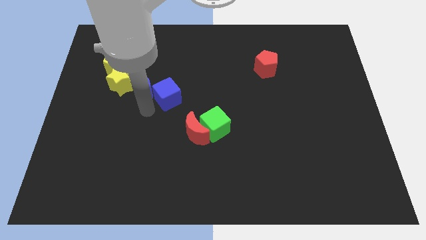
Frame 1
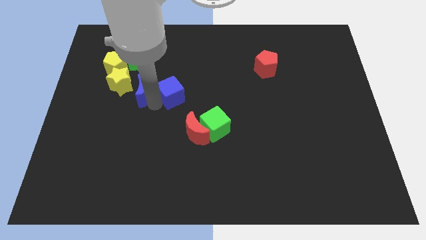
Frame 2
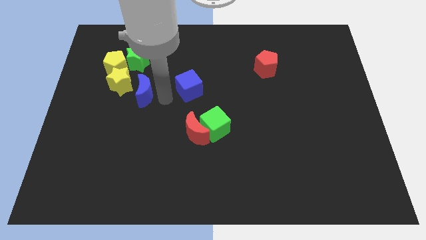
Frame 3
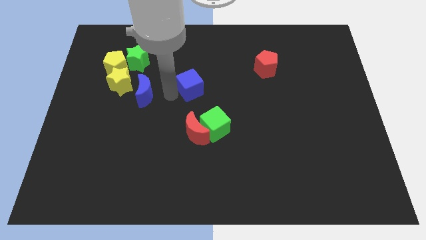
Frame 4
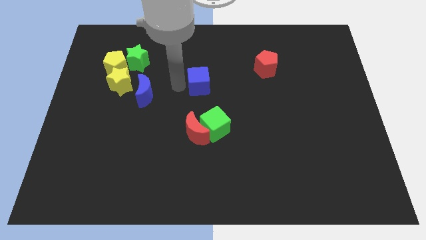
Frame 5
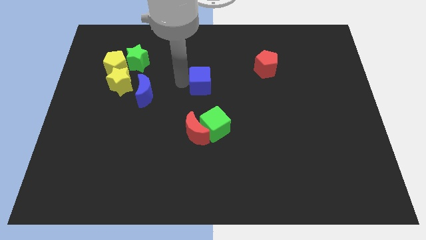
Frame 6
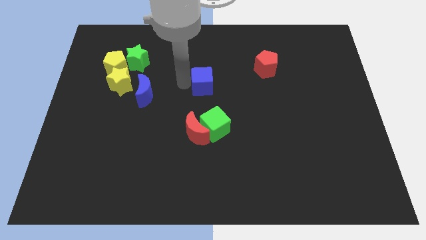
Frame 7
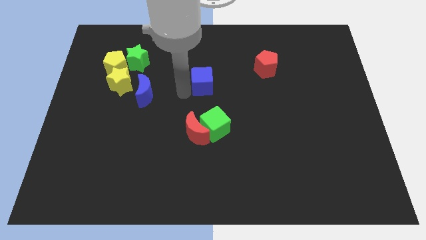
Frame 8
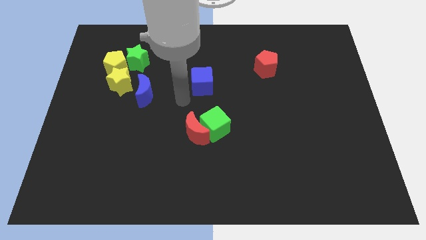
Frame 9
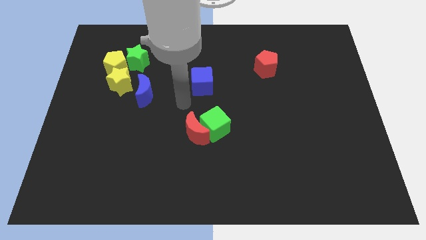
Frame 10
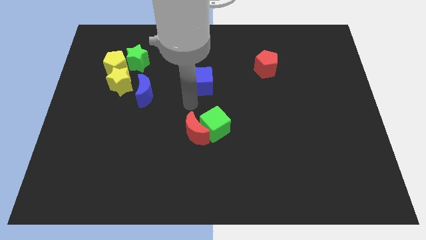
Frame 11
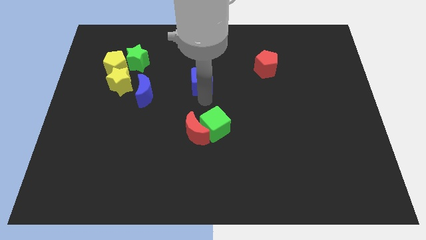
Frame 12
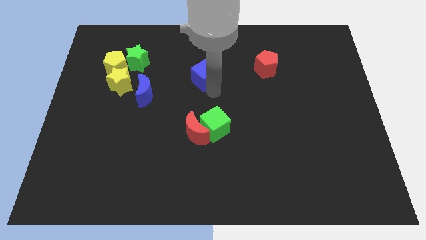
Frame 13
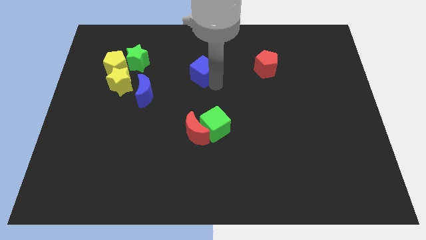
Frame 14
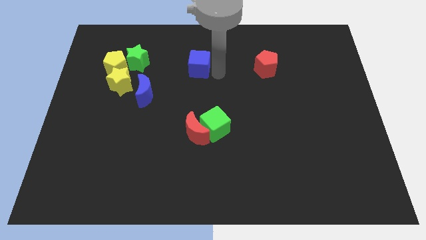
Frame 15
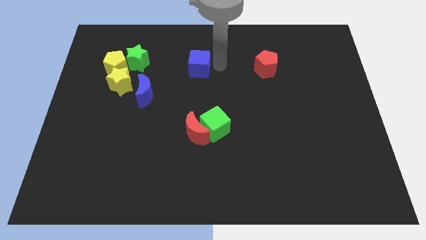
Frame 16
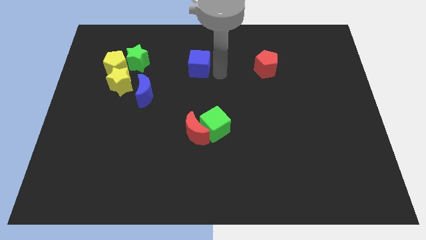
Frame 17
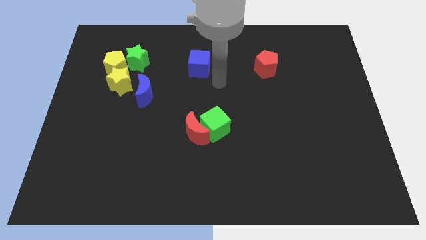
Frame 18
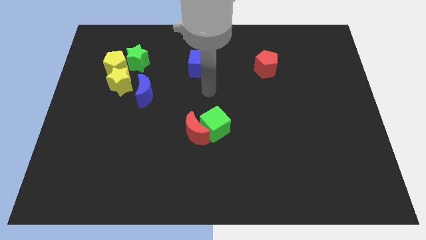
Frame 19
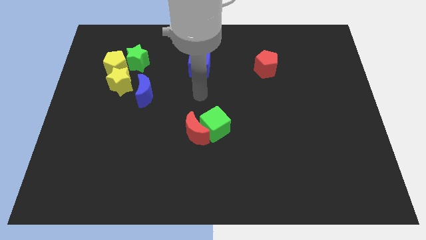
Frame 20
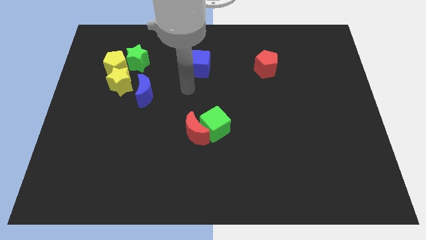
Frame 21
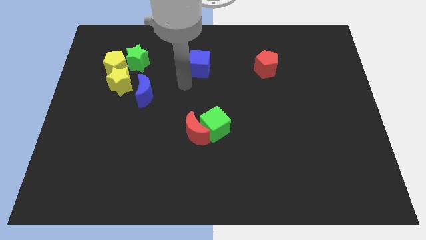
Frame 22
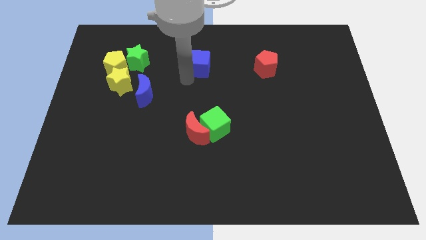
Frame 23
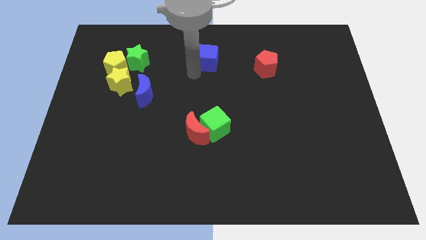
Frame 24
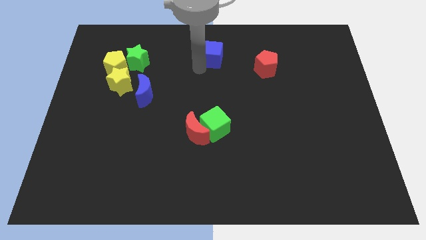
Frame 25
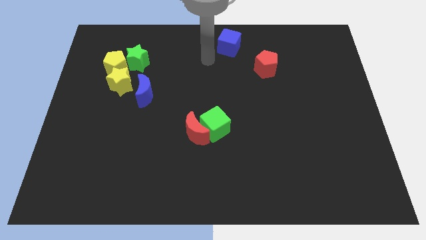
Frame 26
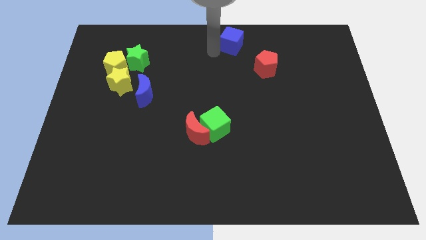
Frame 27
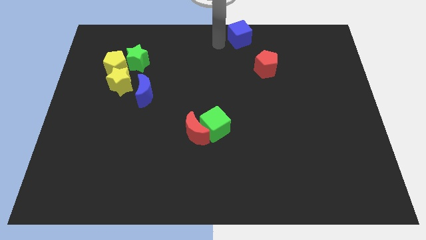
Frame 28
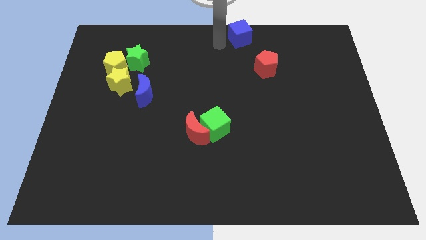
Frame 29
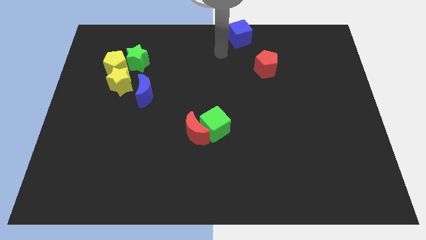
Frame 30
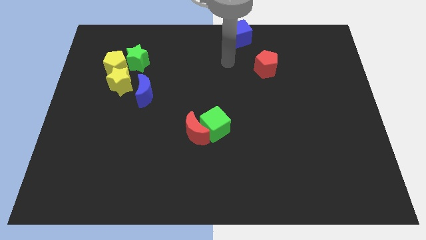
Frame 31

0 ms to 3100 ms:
push the blue cube near to the top center

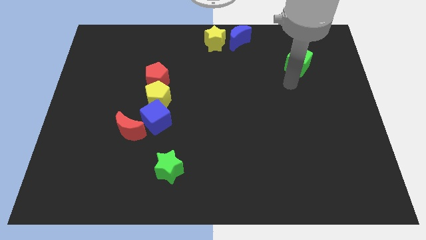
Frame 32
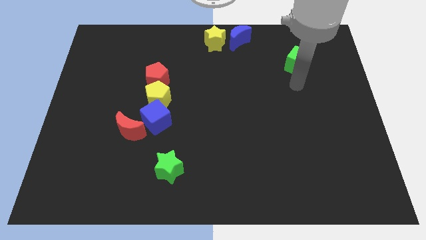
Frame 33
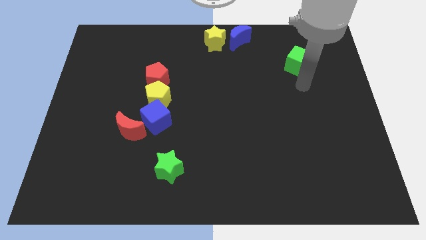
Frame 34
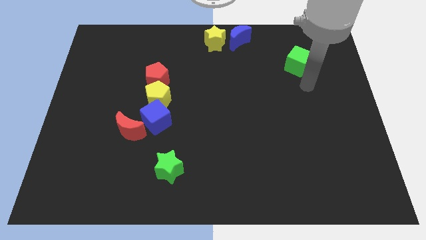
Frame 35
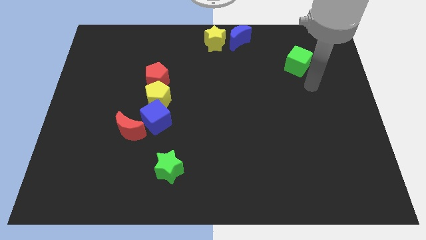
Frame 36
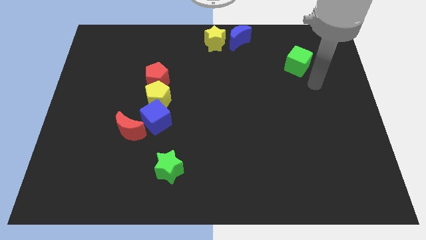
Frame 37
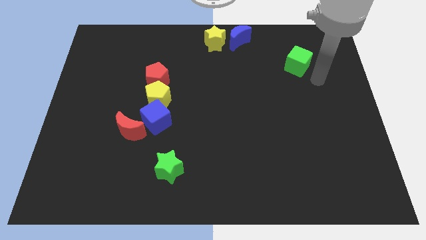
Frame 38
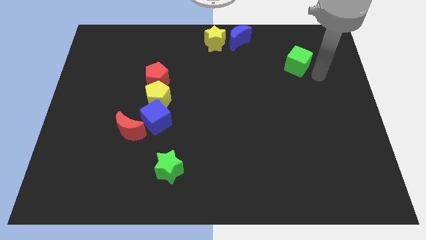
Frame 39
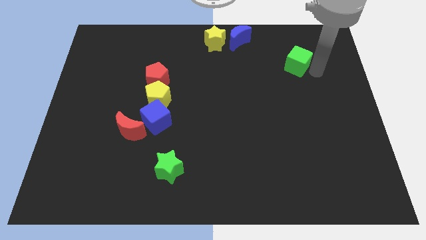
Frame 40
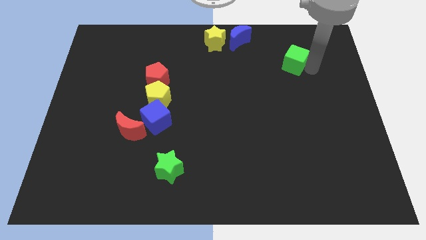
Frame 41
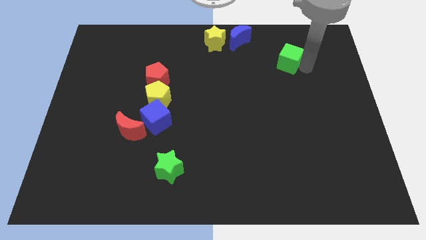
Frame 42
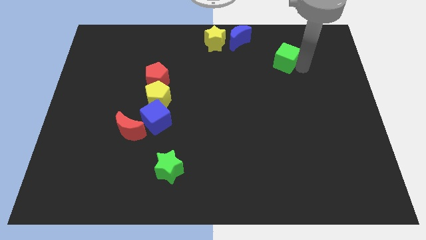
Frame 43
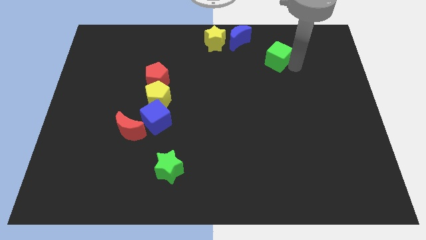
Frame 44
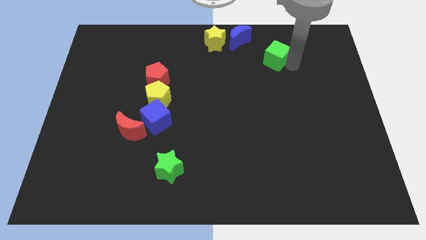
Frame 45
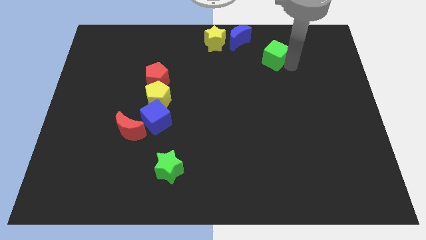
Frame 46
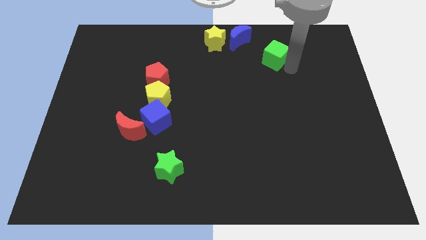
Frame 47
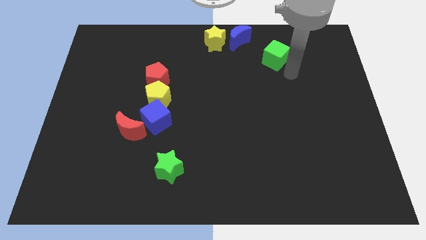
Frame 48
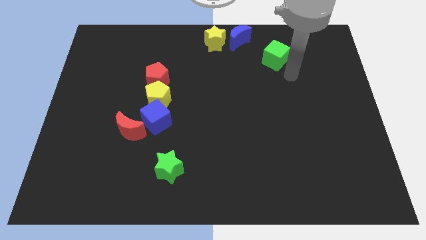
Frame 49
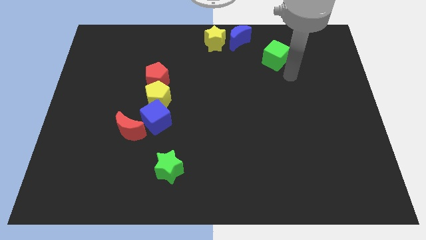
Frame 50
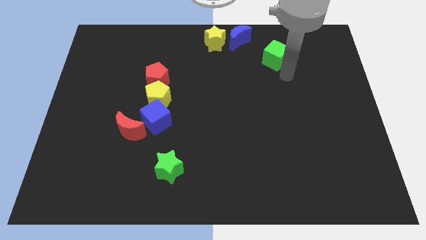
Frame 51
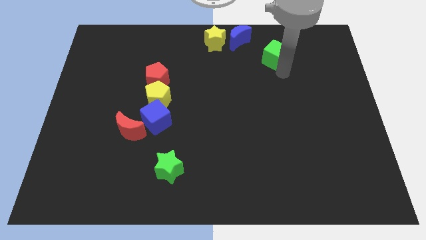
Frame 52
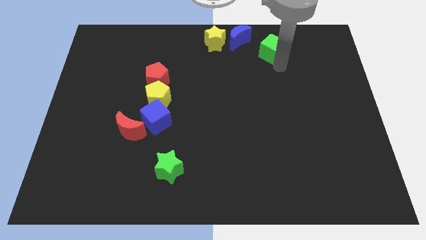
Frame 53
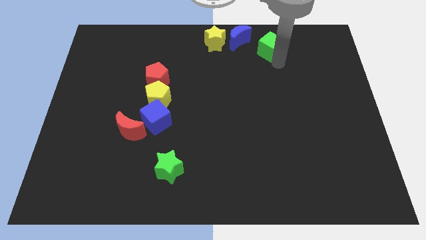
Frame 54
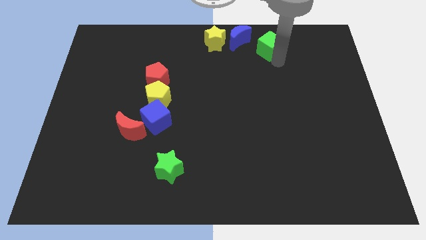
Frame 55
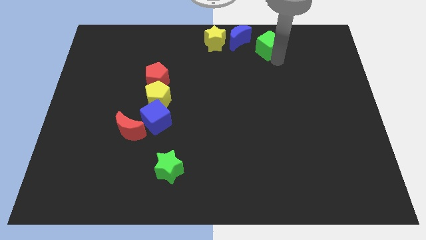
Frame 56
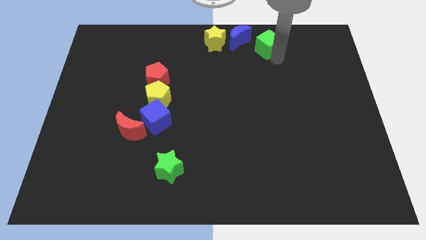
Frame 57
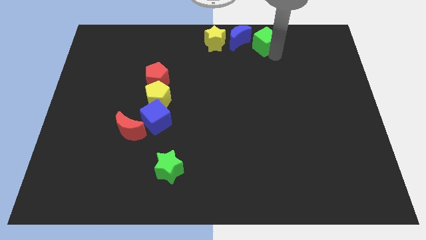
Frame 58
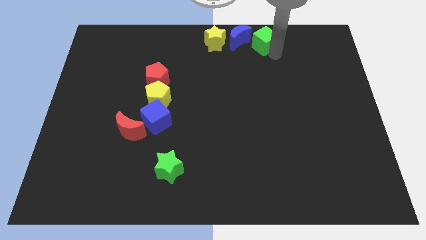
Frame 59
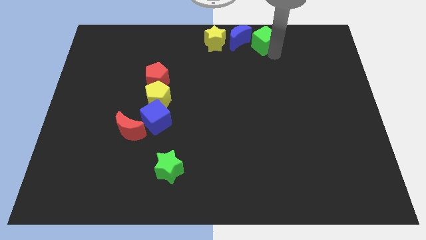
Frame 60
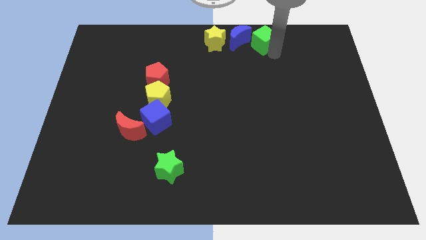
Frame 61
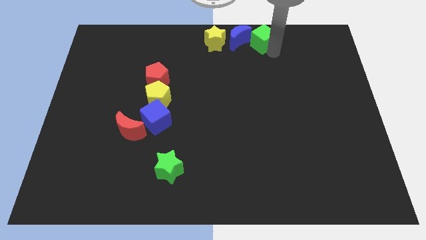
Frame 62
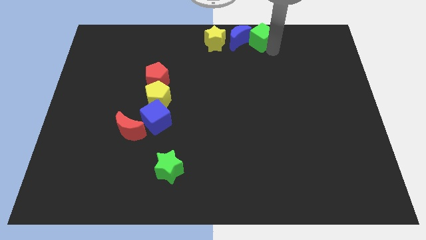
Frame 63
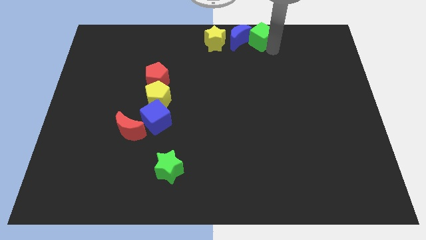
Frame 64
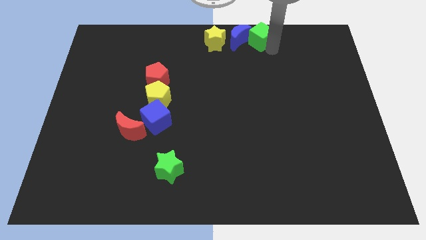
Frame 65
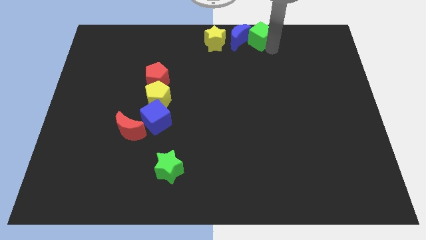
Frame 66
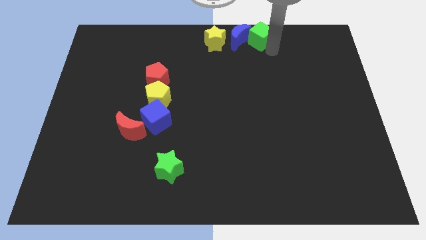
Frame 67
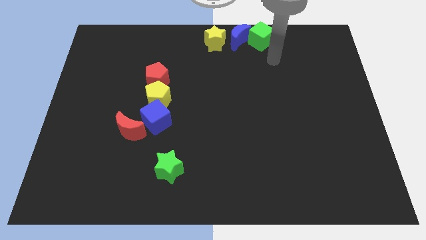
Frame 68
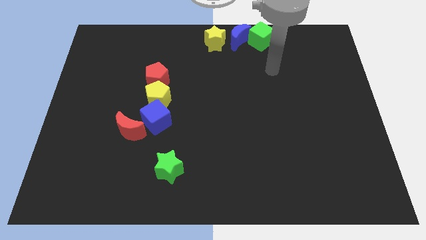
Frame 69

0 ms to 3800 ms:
move the green cube right to the blue crescent

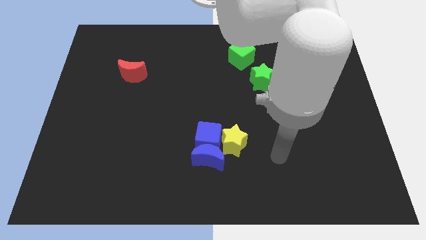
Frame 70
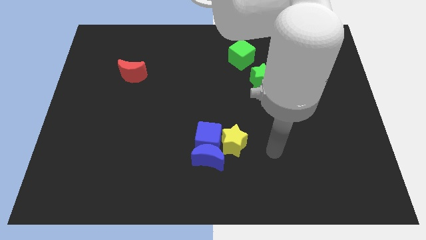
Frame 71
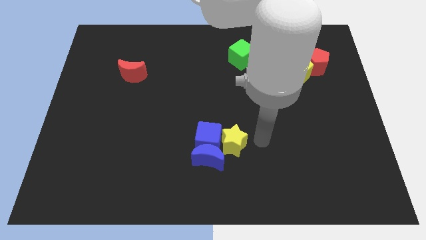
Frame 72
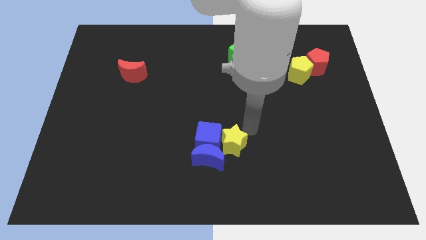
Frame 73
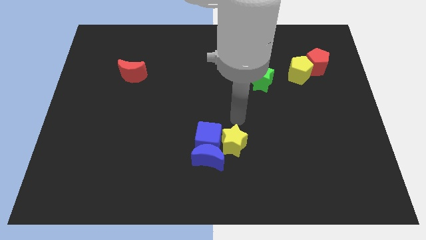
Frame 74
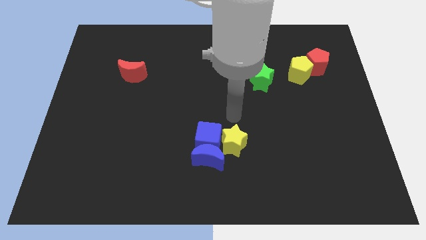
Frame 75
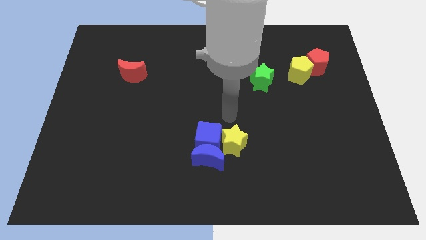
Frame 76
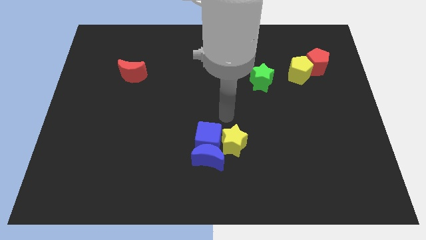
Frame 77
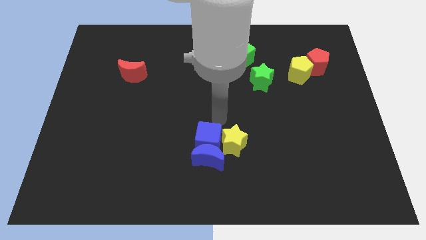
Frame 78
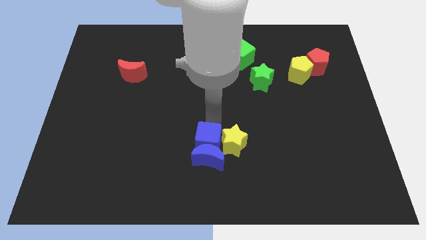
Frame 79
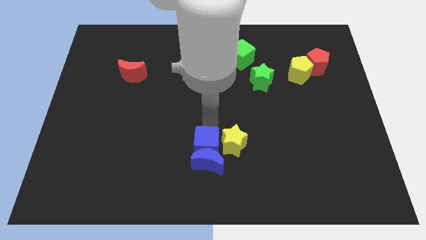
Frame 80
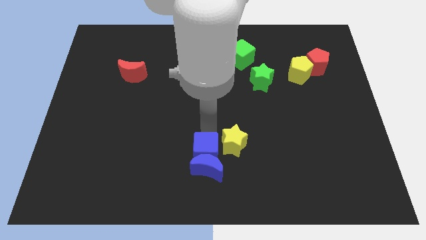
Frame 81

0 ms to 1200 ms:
tap the blue cube

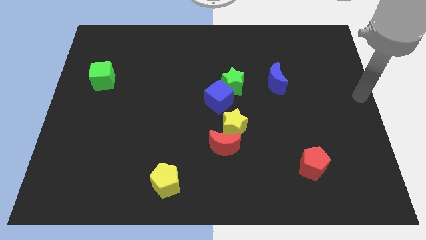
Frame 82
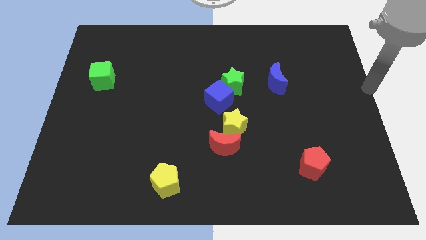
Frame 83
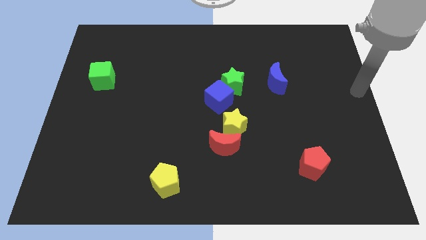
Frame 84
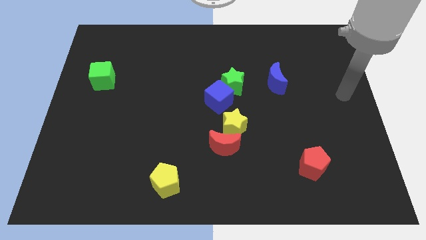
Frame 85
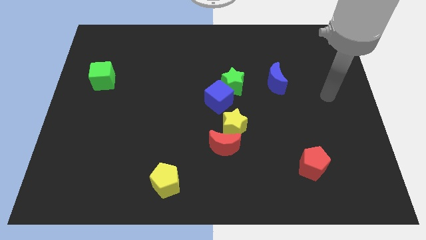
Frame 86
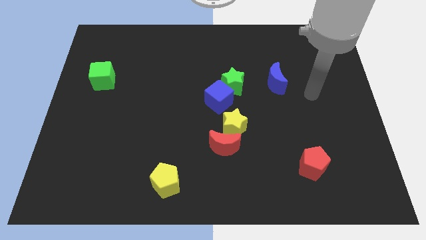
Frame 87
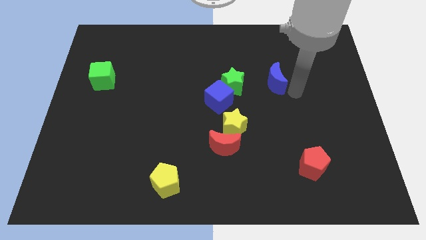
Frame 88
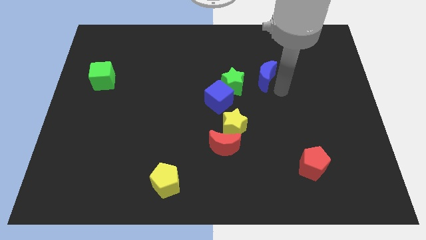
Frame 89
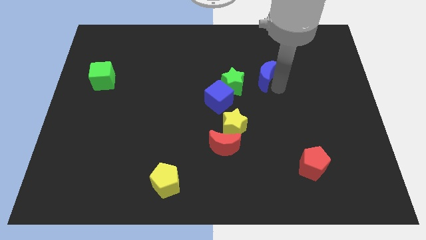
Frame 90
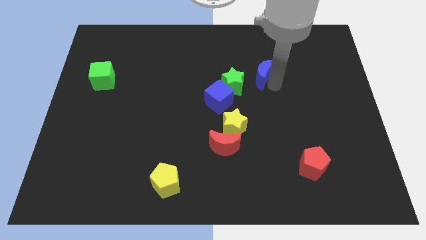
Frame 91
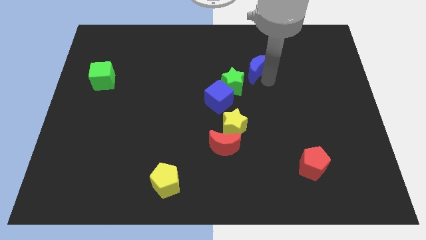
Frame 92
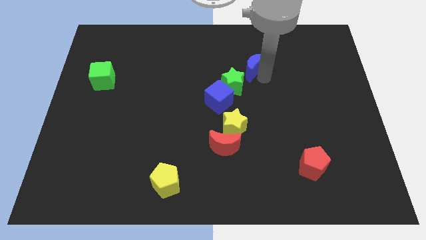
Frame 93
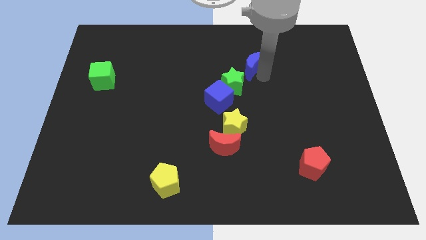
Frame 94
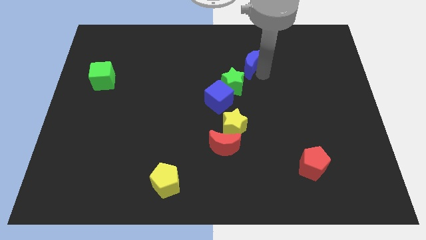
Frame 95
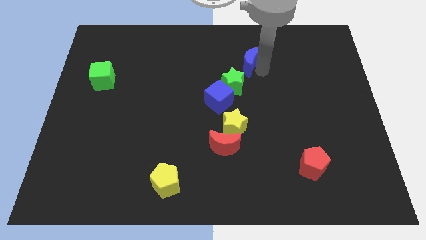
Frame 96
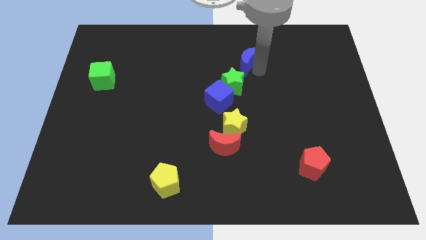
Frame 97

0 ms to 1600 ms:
place the blue moon diagonal to the green star
